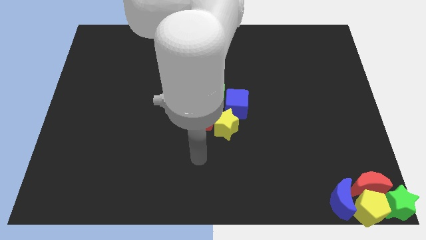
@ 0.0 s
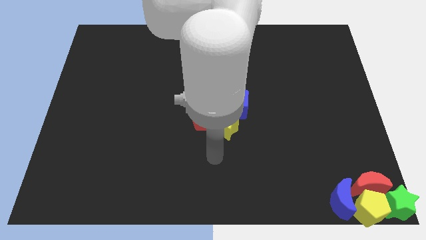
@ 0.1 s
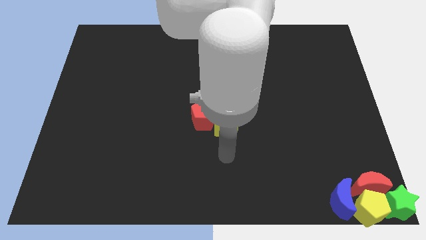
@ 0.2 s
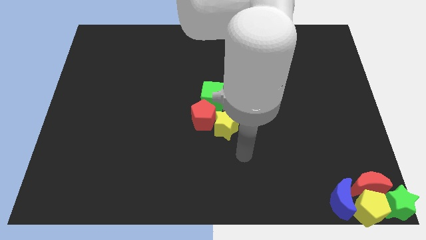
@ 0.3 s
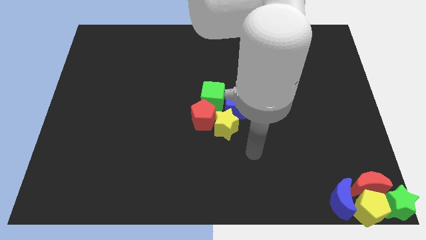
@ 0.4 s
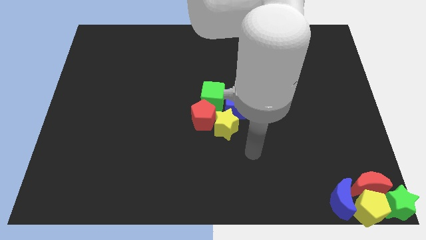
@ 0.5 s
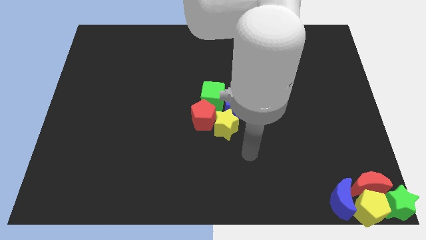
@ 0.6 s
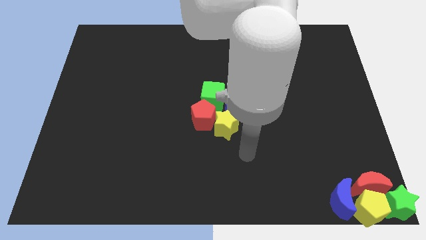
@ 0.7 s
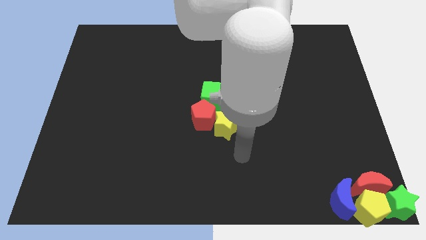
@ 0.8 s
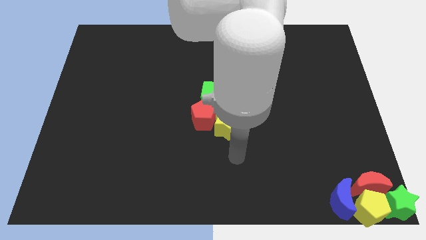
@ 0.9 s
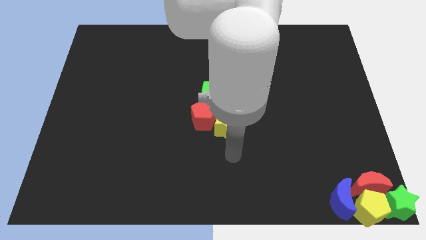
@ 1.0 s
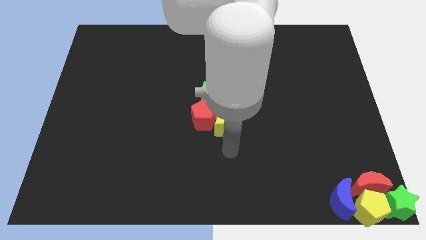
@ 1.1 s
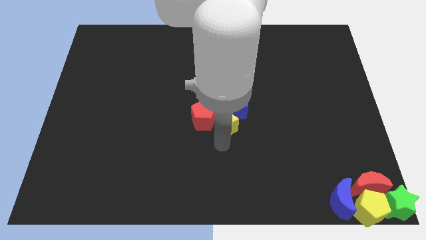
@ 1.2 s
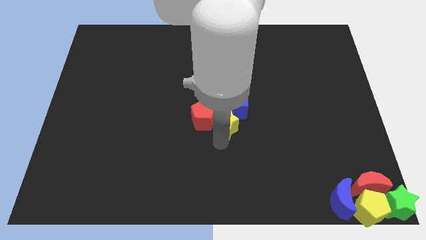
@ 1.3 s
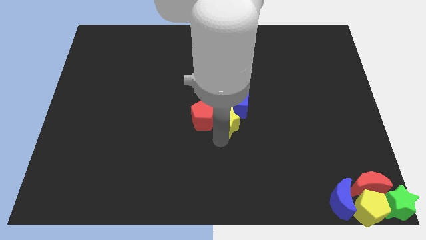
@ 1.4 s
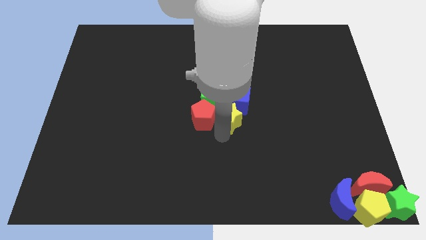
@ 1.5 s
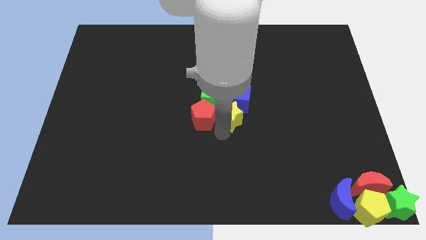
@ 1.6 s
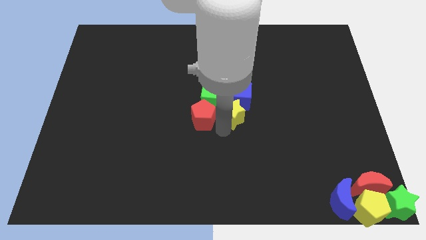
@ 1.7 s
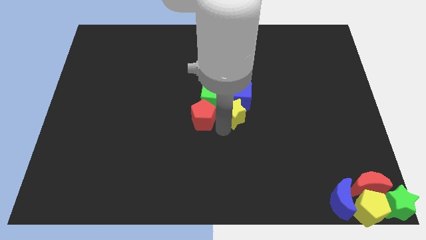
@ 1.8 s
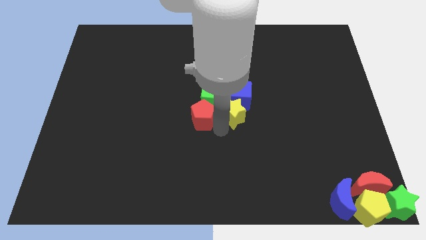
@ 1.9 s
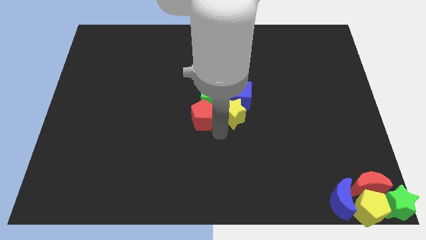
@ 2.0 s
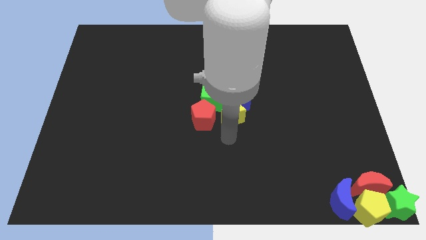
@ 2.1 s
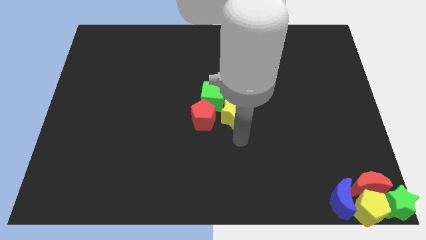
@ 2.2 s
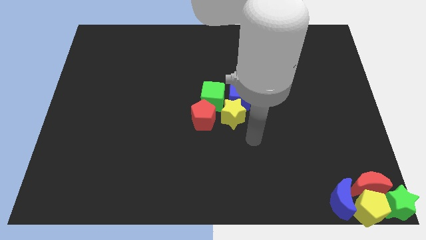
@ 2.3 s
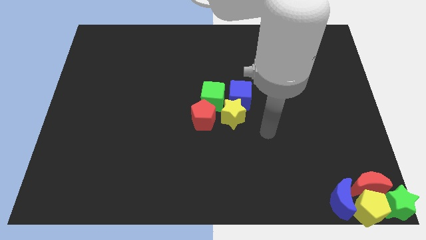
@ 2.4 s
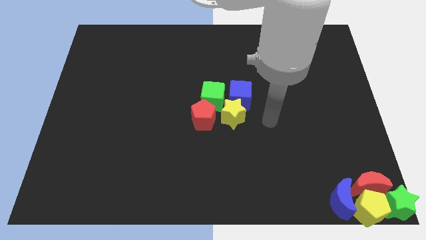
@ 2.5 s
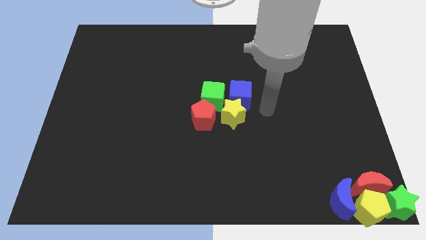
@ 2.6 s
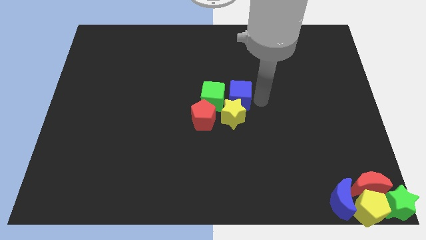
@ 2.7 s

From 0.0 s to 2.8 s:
move the yellow star and blue cube slightly up

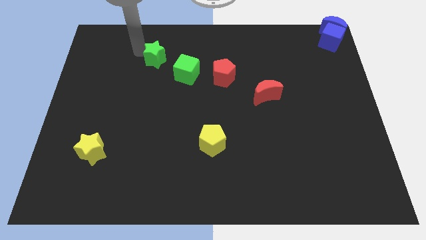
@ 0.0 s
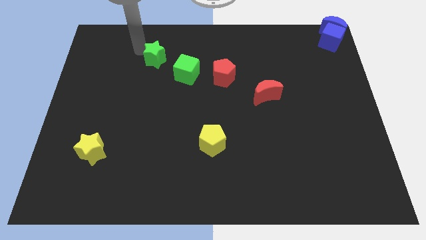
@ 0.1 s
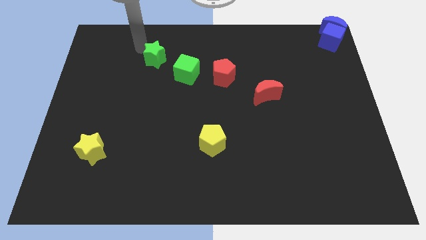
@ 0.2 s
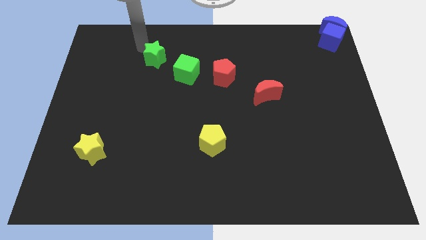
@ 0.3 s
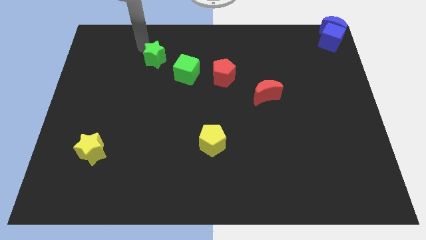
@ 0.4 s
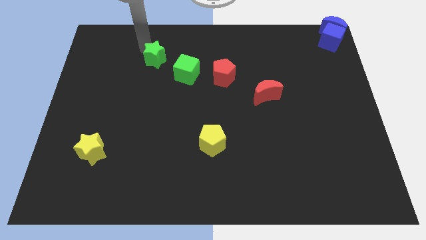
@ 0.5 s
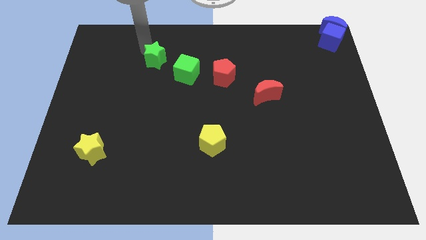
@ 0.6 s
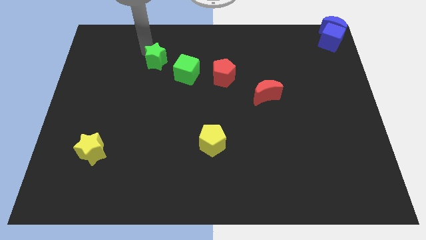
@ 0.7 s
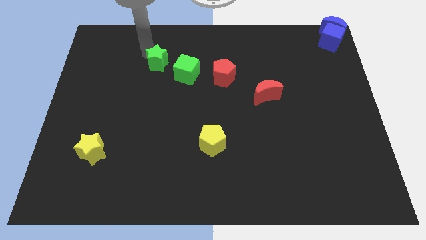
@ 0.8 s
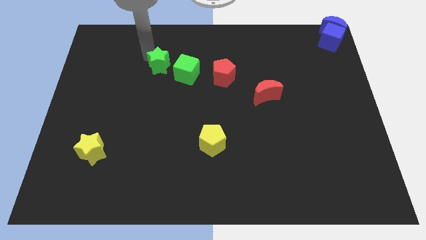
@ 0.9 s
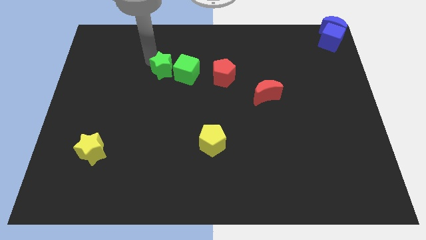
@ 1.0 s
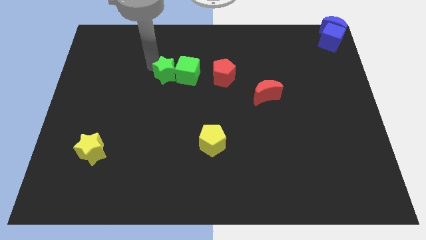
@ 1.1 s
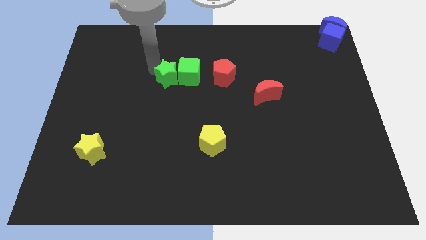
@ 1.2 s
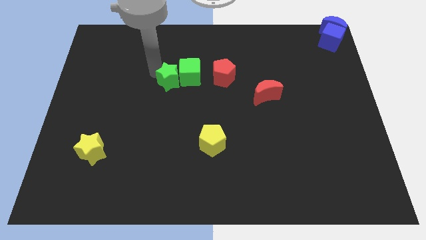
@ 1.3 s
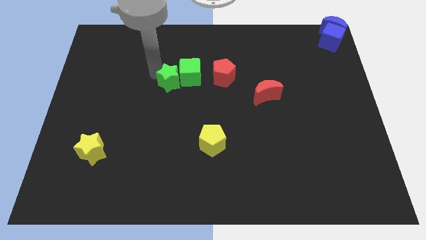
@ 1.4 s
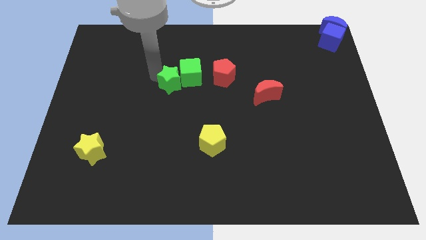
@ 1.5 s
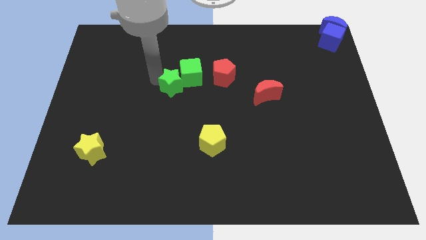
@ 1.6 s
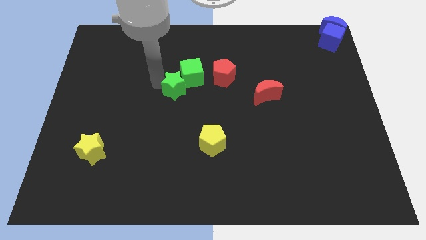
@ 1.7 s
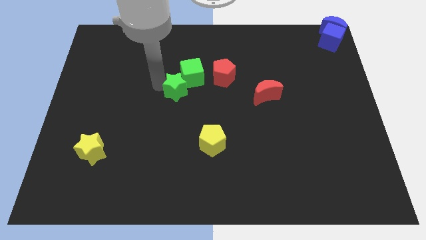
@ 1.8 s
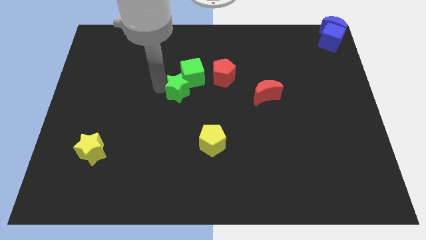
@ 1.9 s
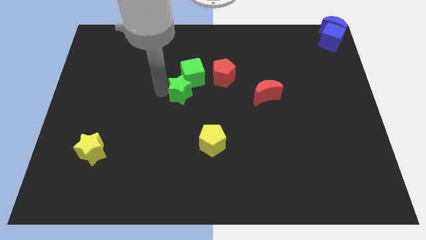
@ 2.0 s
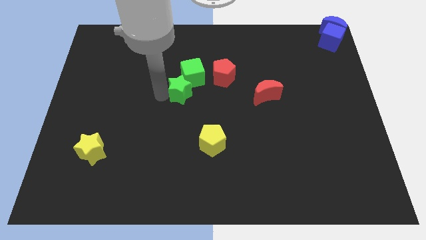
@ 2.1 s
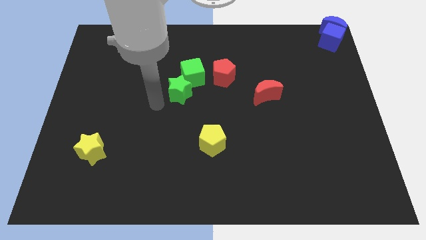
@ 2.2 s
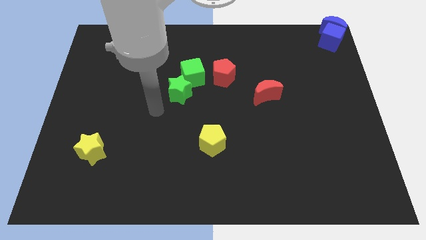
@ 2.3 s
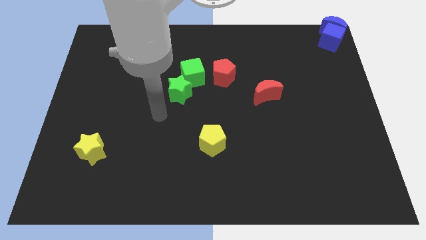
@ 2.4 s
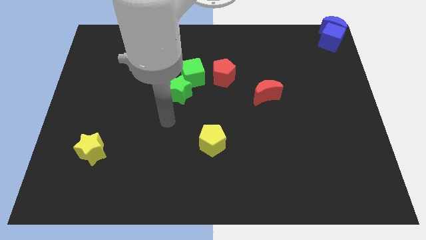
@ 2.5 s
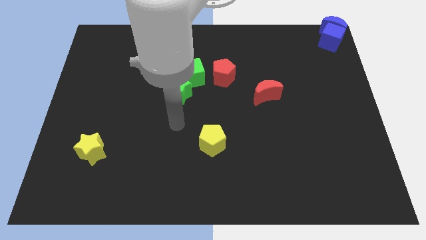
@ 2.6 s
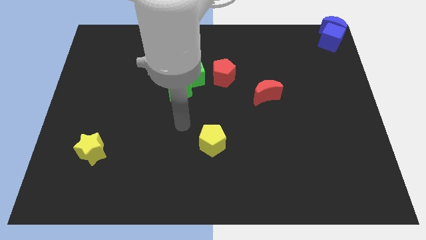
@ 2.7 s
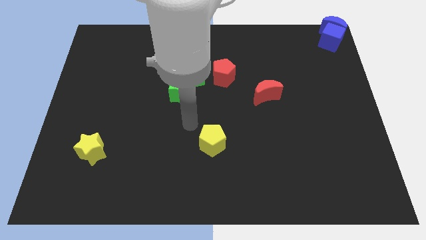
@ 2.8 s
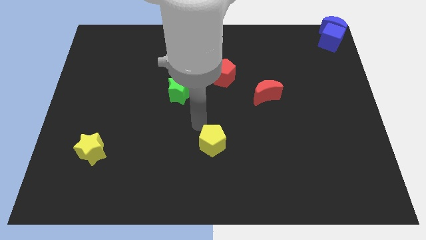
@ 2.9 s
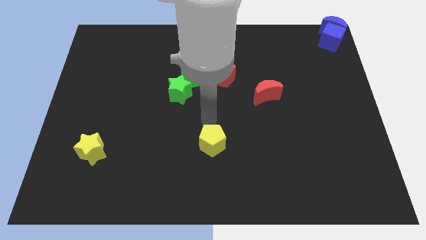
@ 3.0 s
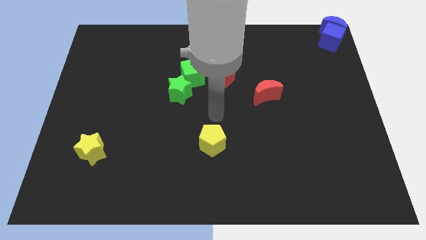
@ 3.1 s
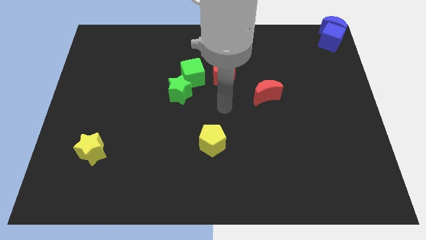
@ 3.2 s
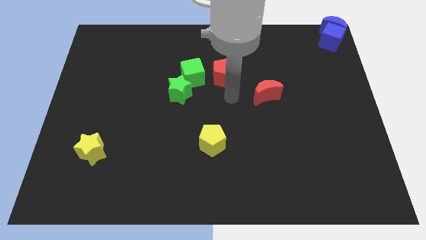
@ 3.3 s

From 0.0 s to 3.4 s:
move the green star below the green cube

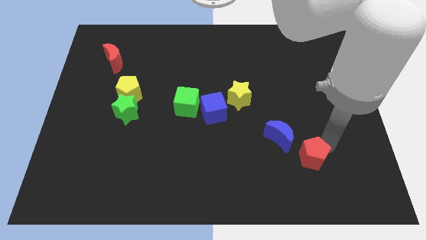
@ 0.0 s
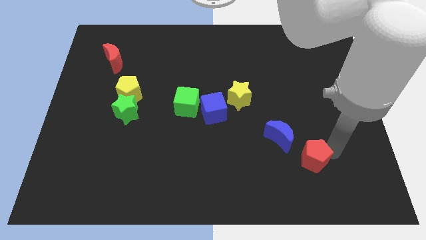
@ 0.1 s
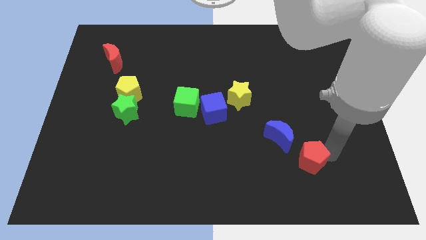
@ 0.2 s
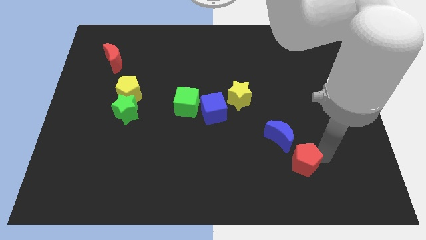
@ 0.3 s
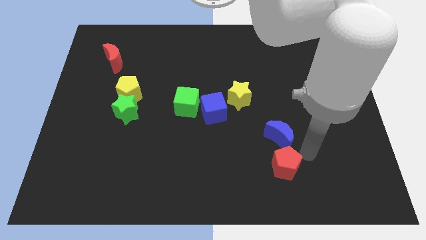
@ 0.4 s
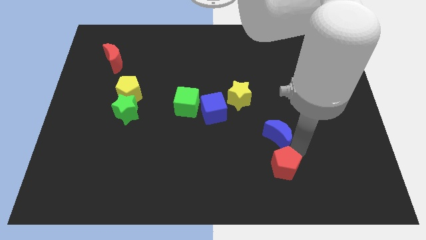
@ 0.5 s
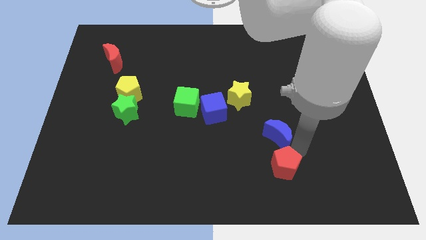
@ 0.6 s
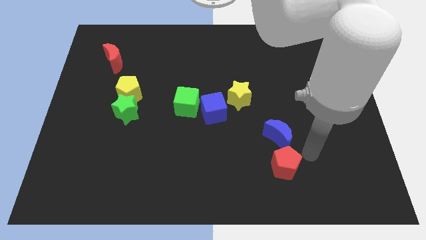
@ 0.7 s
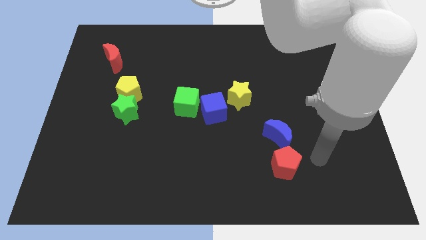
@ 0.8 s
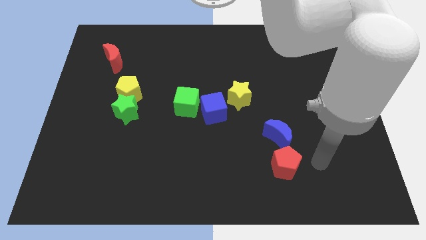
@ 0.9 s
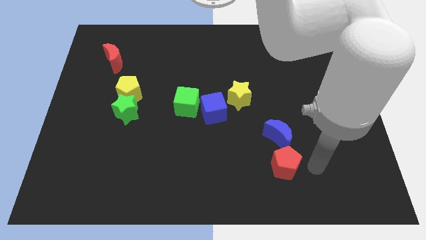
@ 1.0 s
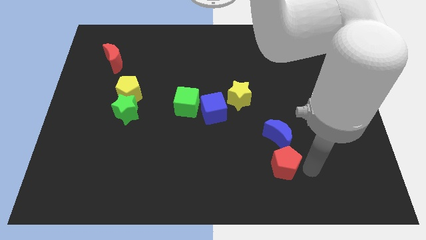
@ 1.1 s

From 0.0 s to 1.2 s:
place red pentagon at the bottom of blue moon

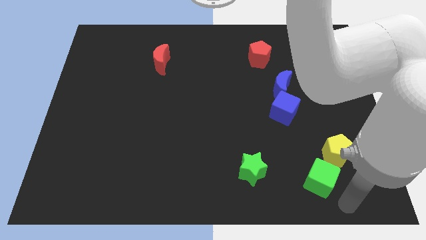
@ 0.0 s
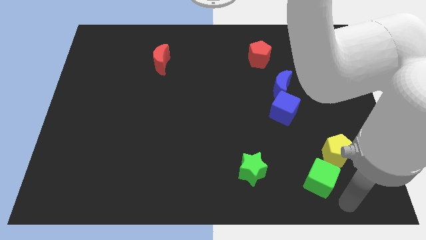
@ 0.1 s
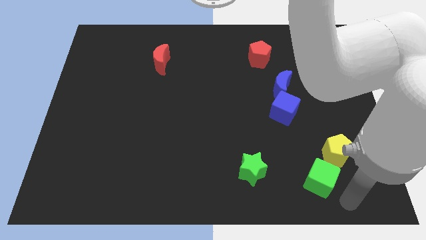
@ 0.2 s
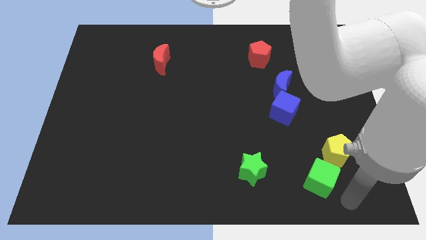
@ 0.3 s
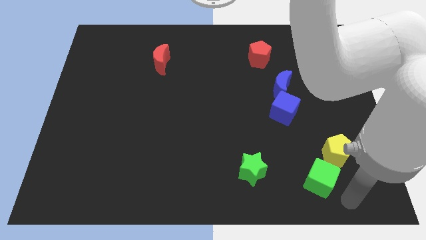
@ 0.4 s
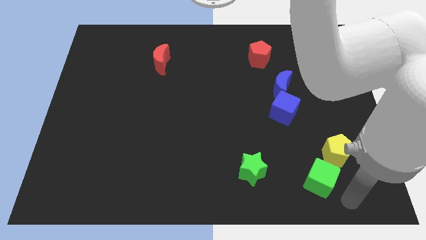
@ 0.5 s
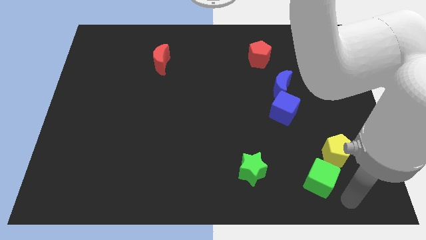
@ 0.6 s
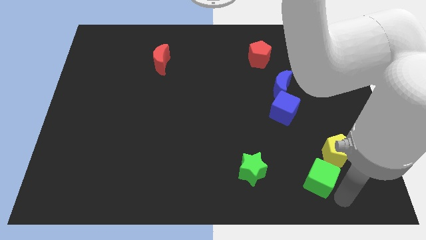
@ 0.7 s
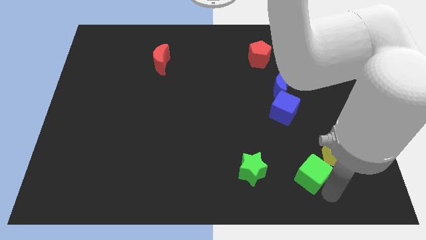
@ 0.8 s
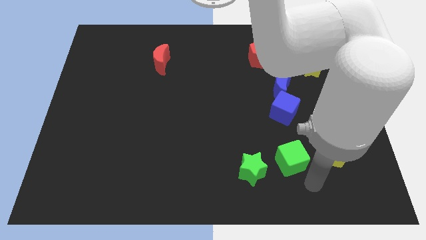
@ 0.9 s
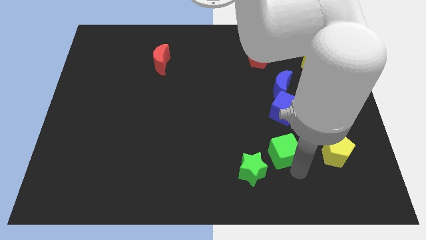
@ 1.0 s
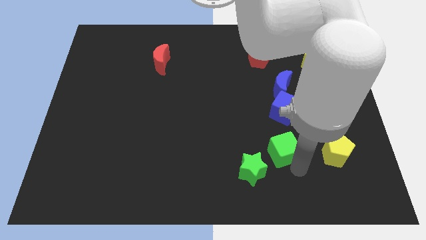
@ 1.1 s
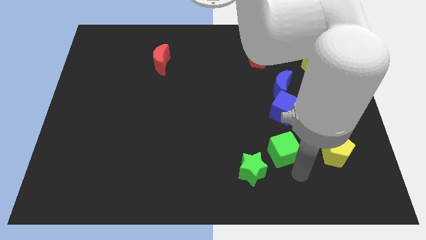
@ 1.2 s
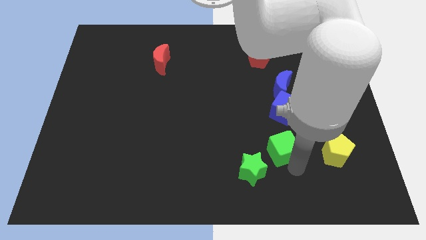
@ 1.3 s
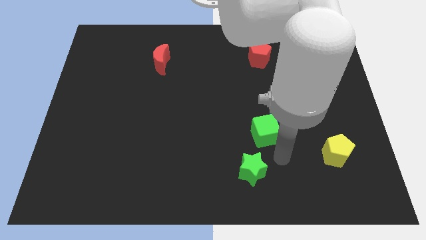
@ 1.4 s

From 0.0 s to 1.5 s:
separate the green cube from the yellow pentagon

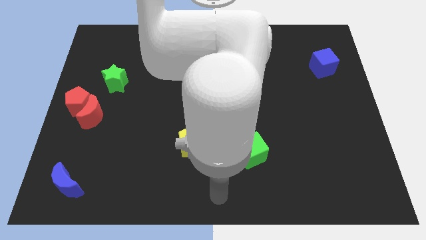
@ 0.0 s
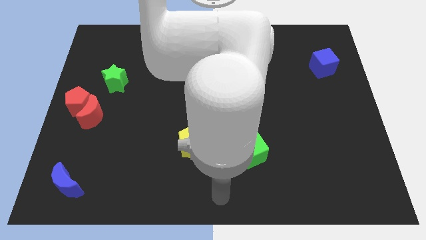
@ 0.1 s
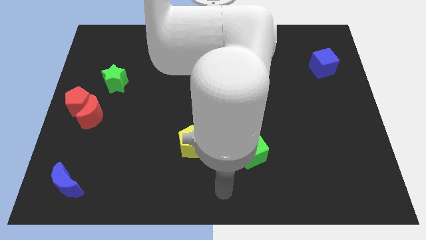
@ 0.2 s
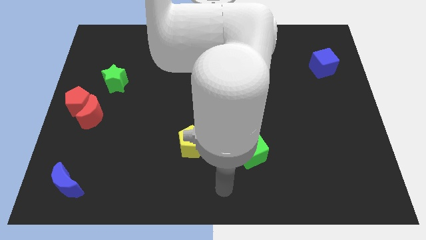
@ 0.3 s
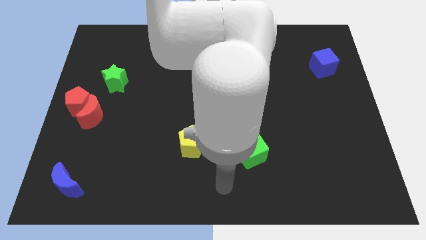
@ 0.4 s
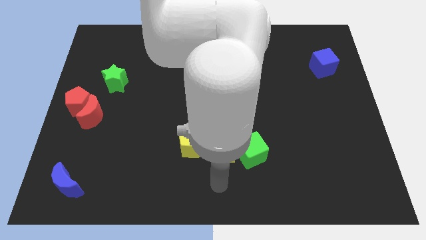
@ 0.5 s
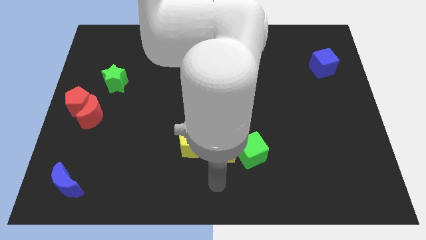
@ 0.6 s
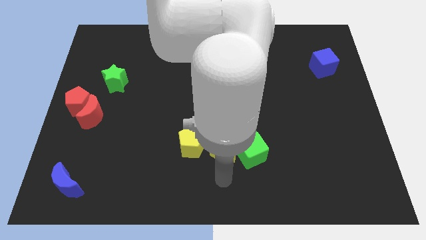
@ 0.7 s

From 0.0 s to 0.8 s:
place arm at the bottom of yellow star
